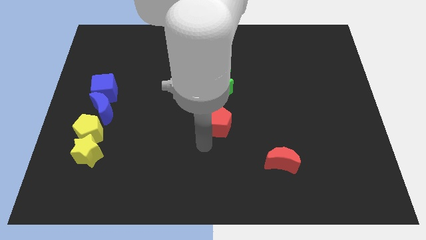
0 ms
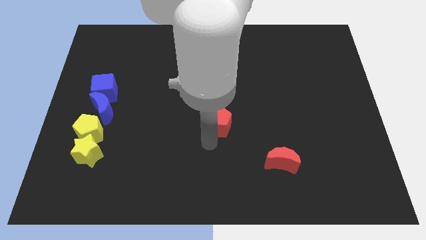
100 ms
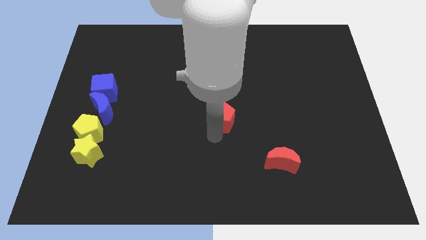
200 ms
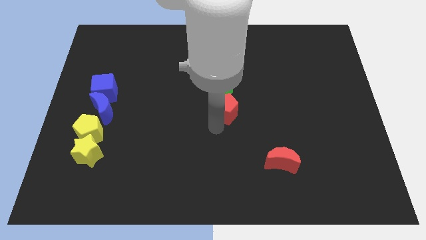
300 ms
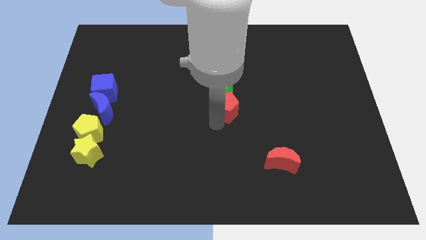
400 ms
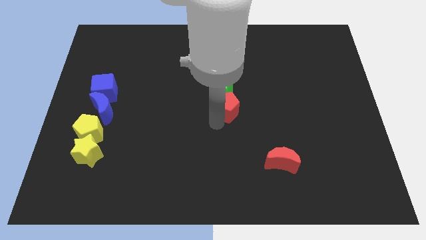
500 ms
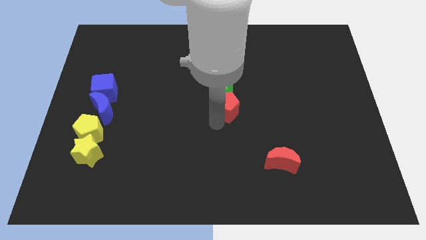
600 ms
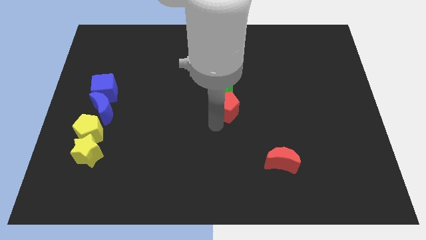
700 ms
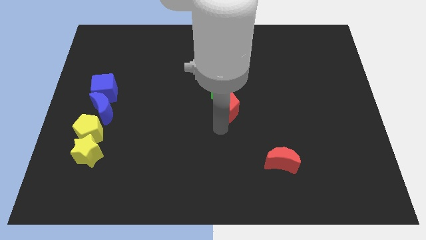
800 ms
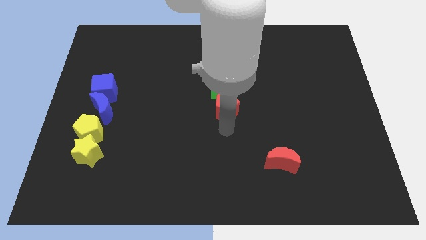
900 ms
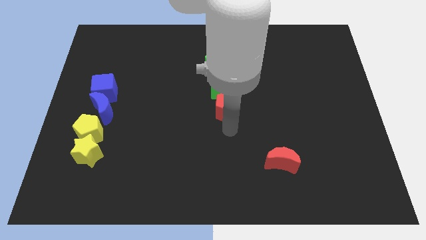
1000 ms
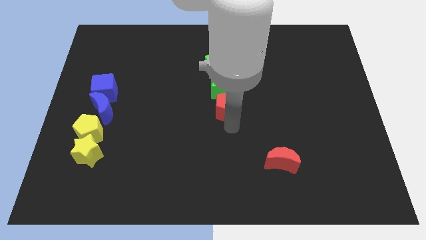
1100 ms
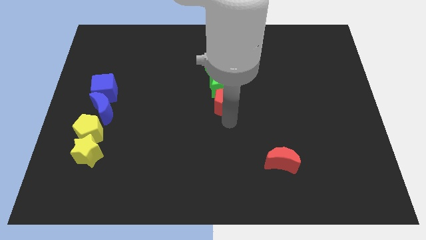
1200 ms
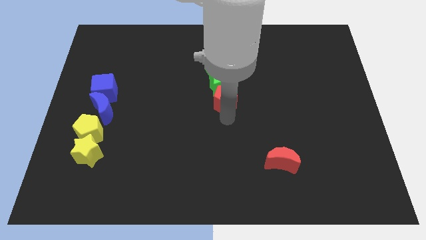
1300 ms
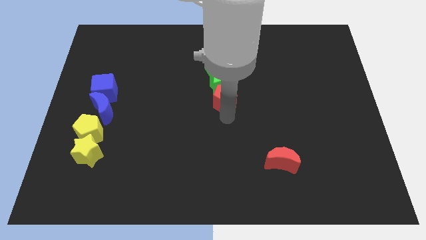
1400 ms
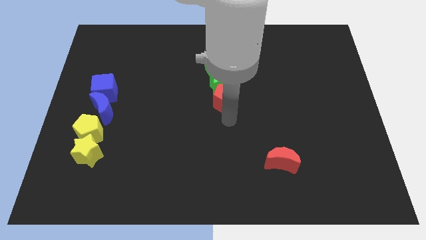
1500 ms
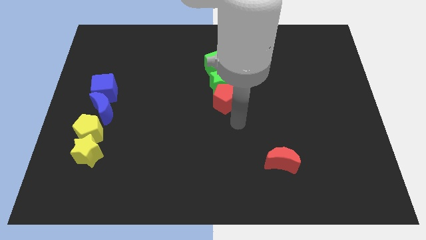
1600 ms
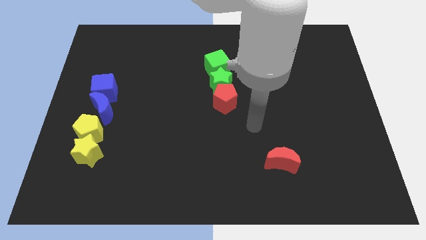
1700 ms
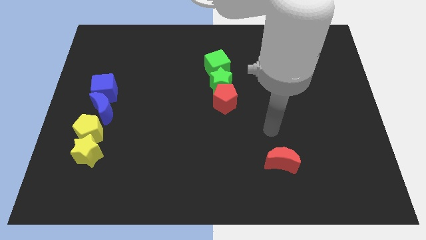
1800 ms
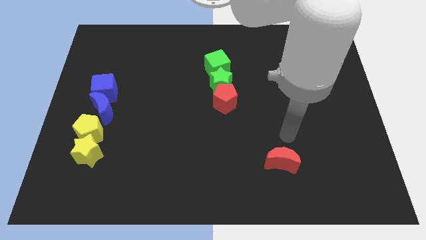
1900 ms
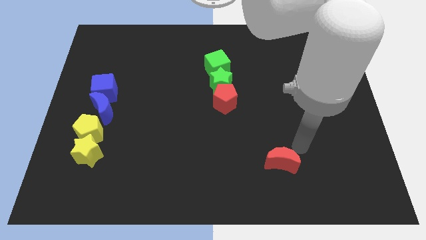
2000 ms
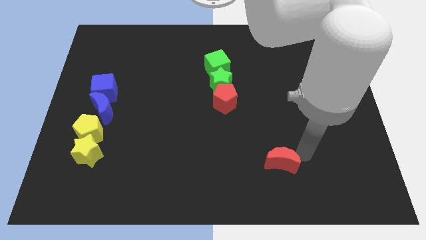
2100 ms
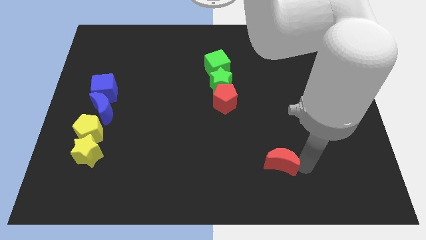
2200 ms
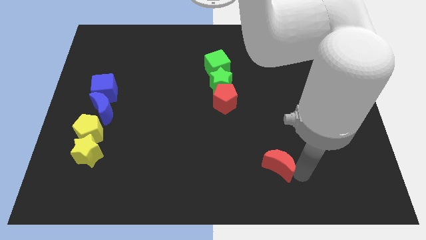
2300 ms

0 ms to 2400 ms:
move the red pentagon to the bottom of green star

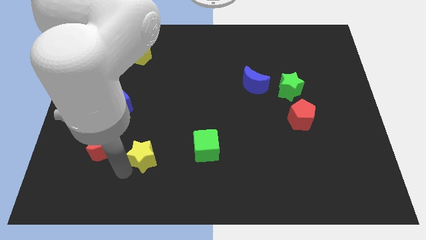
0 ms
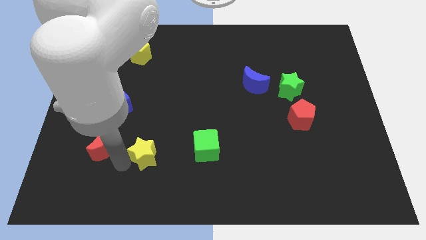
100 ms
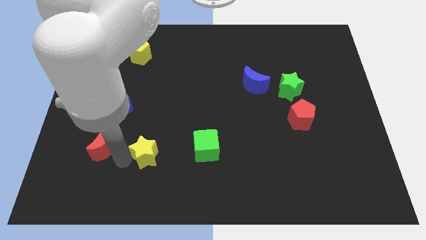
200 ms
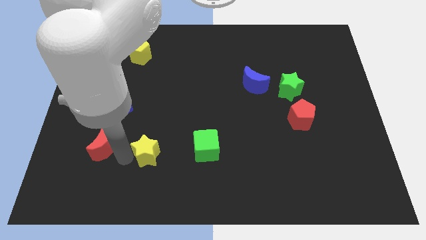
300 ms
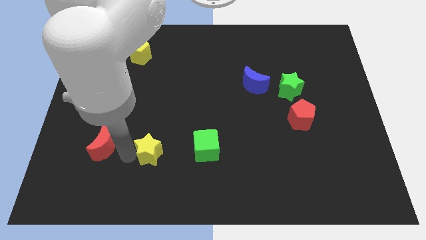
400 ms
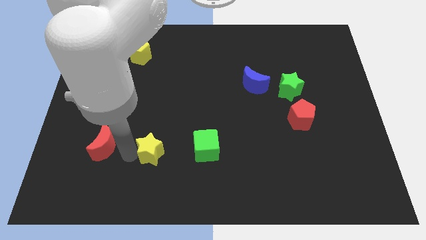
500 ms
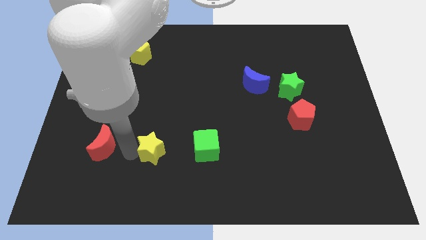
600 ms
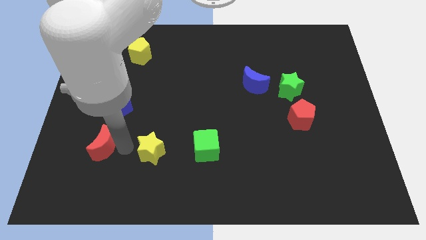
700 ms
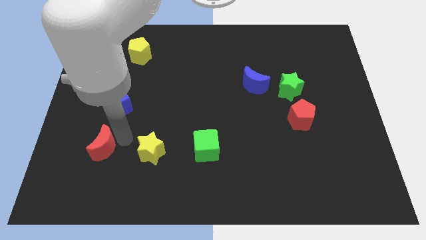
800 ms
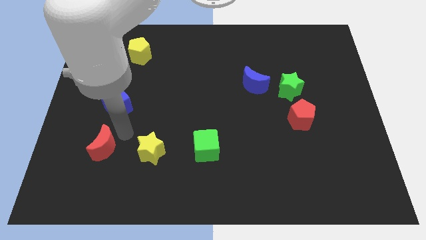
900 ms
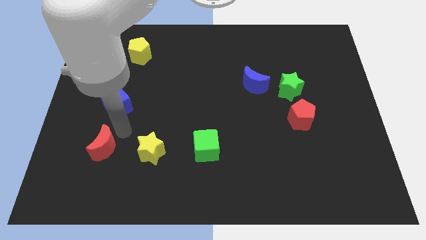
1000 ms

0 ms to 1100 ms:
place the yellow star in between the green cube and the red crescent

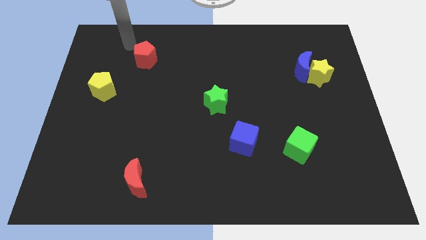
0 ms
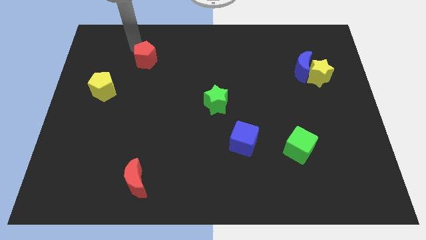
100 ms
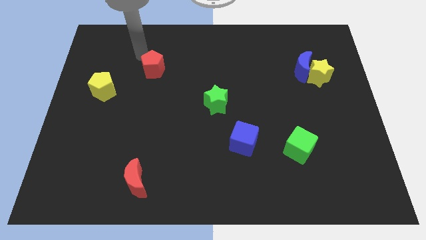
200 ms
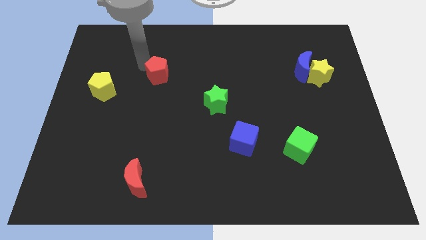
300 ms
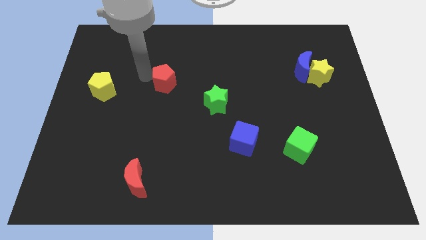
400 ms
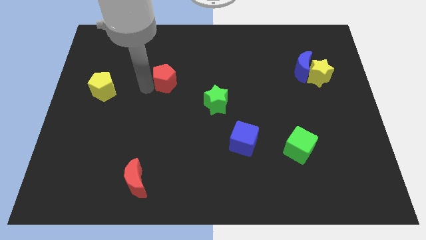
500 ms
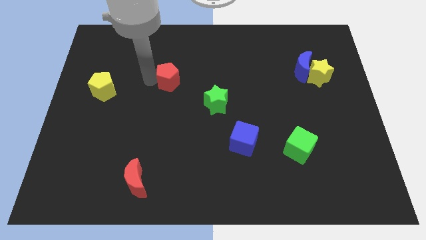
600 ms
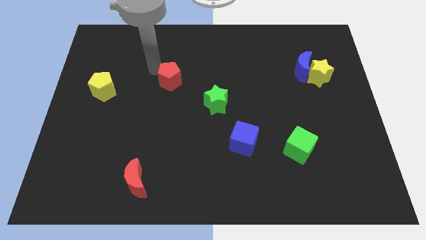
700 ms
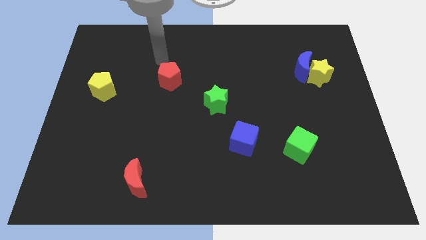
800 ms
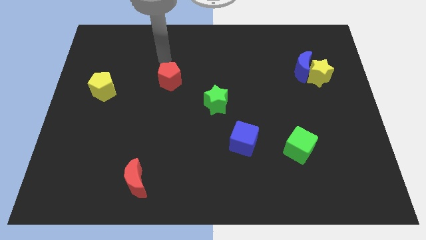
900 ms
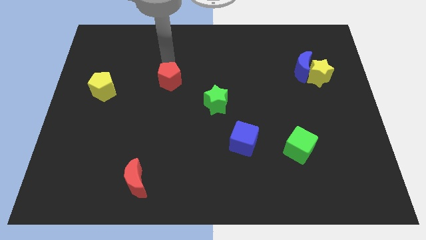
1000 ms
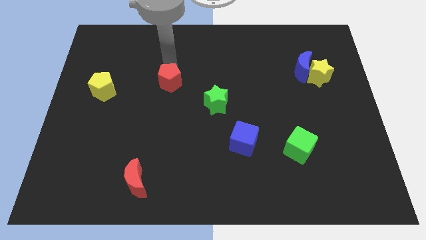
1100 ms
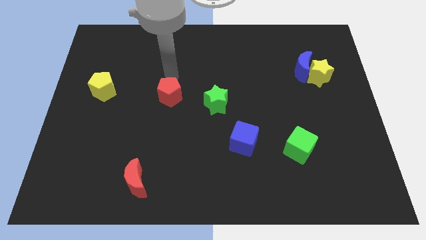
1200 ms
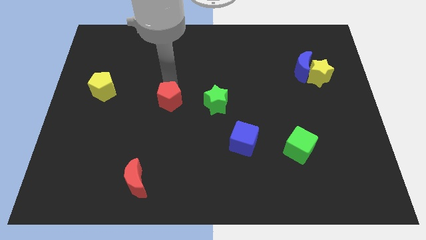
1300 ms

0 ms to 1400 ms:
move the red pentagon to the left side of the green star

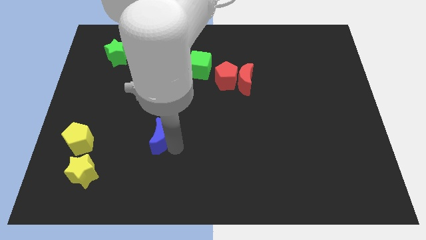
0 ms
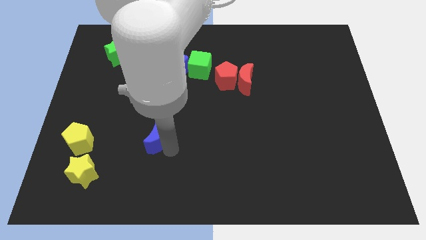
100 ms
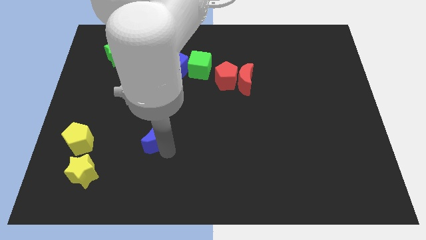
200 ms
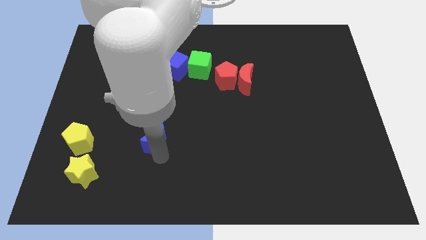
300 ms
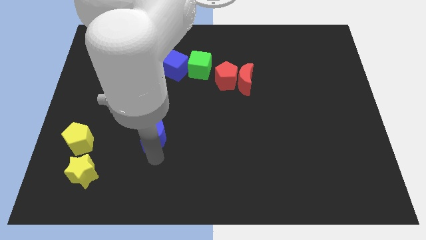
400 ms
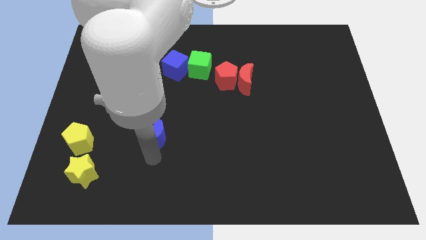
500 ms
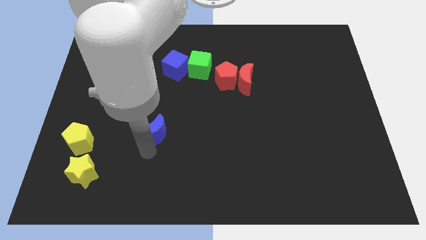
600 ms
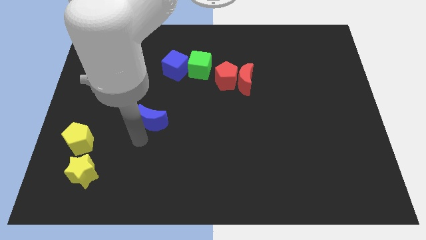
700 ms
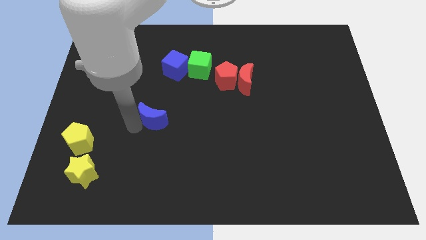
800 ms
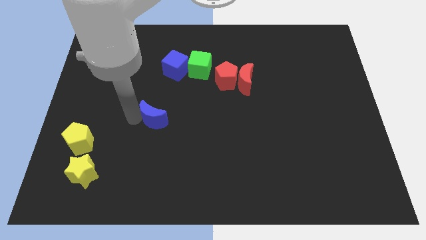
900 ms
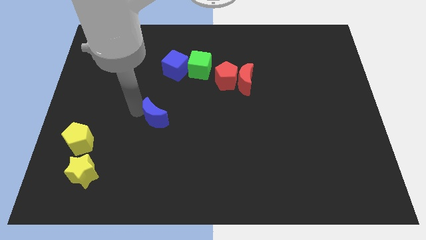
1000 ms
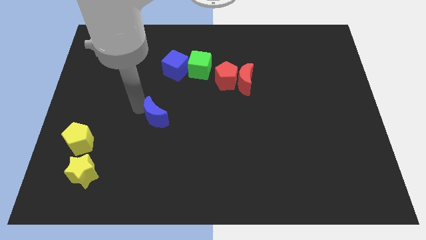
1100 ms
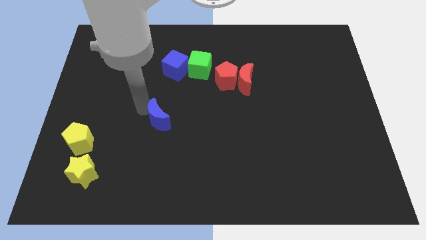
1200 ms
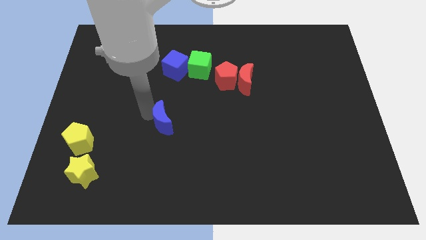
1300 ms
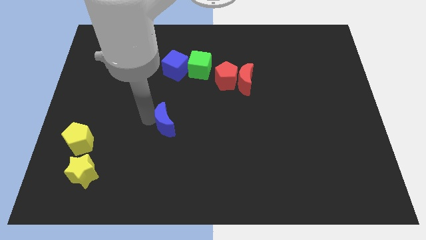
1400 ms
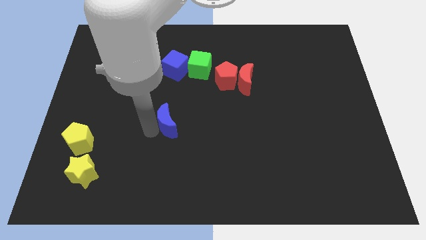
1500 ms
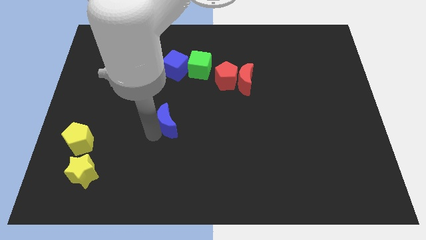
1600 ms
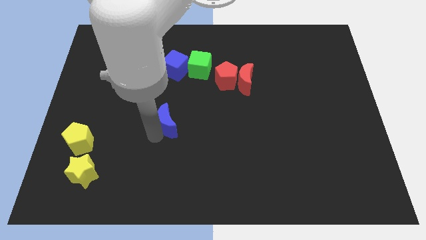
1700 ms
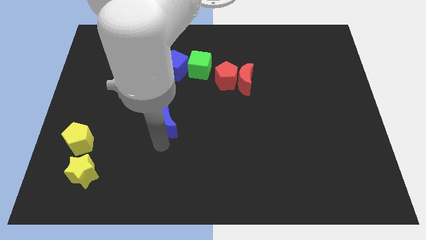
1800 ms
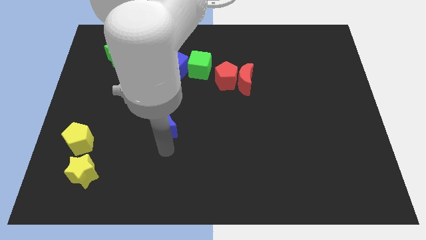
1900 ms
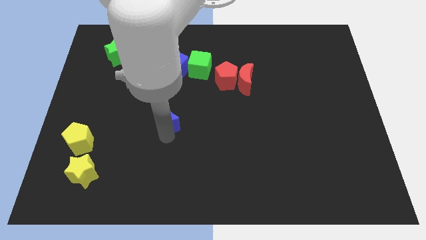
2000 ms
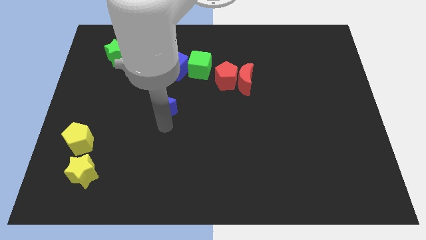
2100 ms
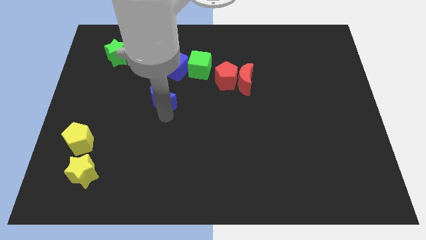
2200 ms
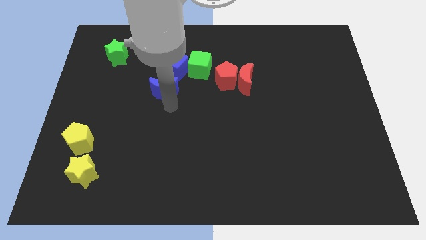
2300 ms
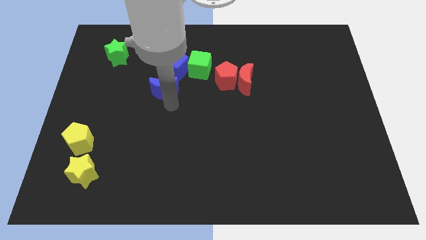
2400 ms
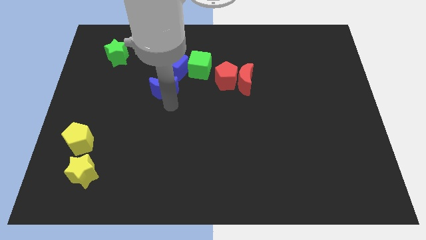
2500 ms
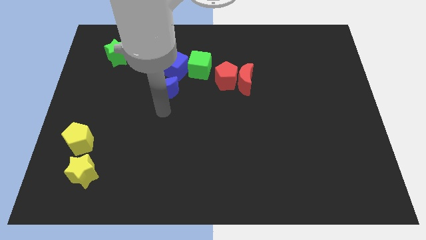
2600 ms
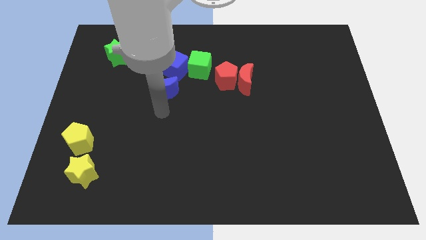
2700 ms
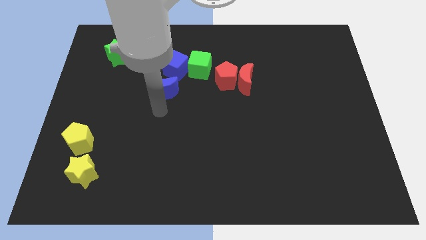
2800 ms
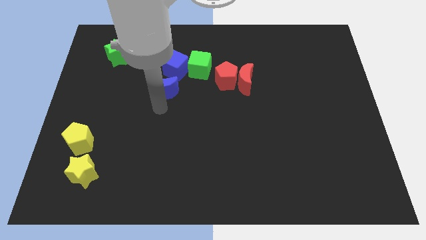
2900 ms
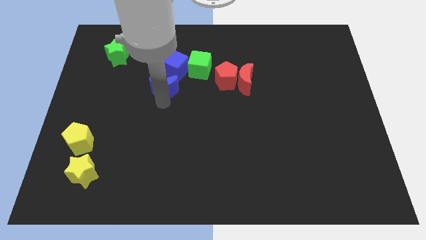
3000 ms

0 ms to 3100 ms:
push the blue moon close to the blue cube

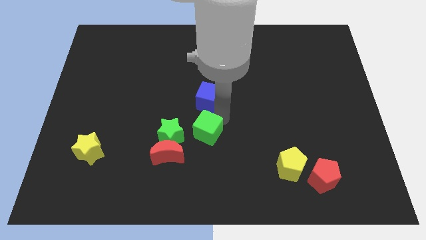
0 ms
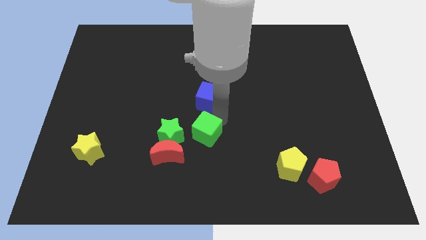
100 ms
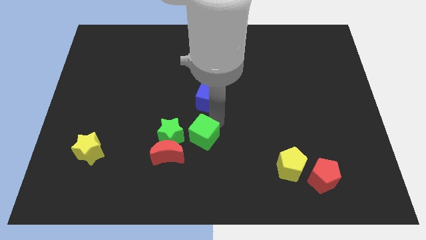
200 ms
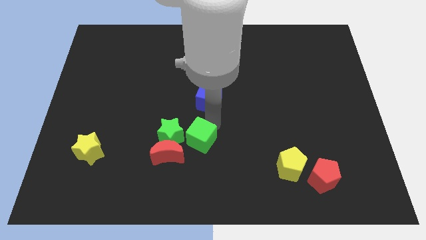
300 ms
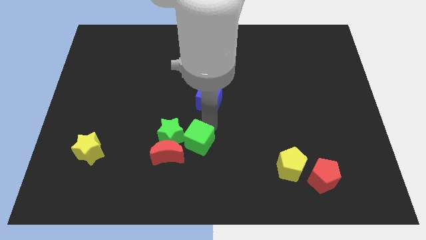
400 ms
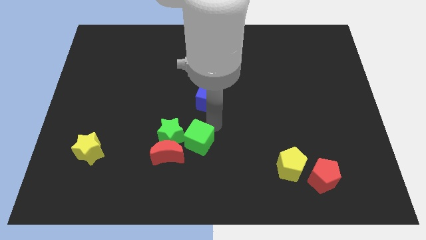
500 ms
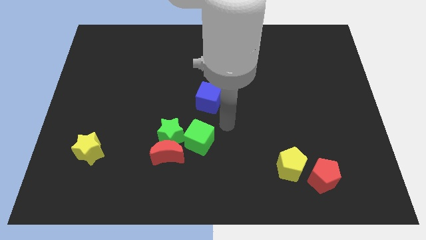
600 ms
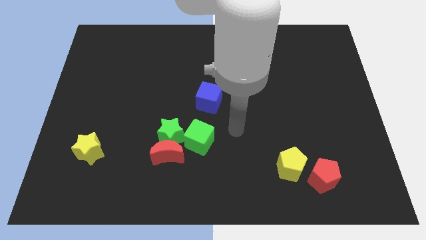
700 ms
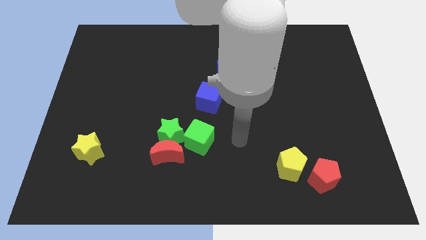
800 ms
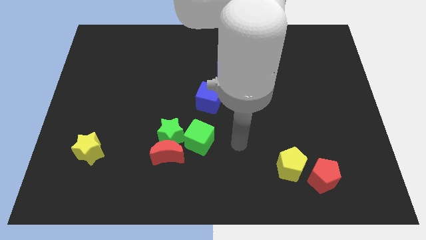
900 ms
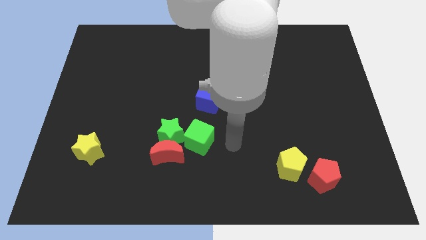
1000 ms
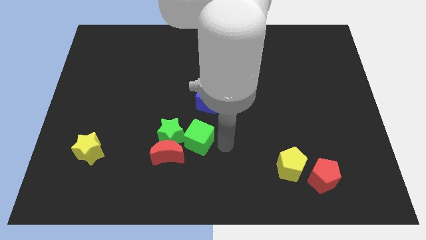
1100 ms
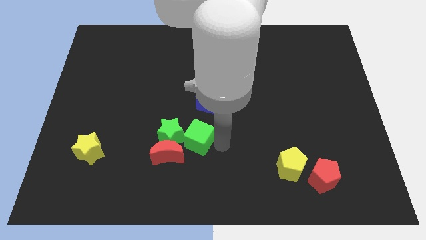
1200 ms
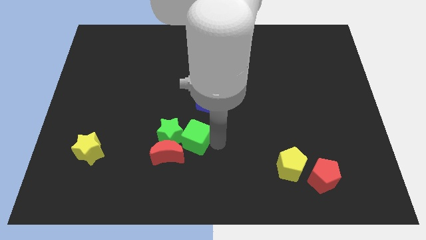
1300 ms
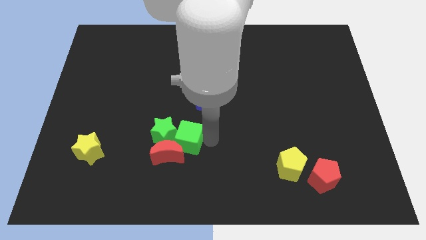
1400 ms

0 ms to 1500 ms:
push the green cube into the green star
